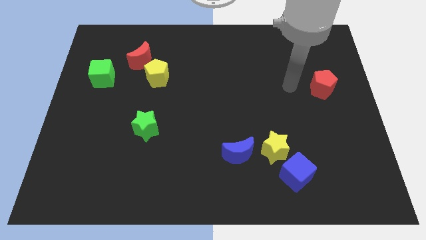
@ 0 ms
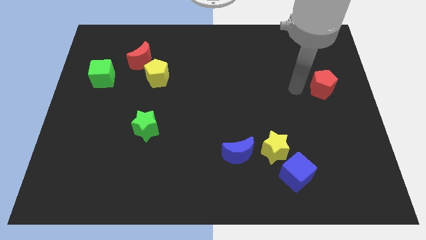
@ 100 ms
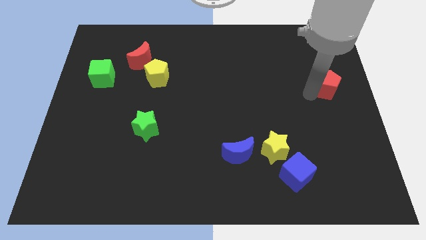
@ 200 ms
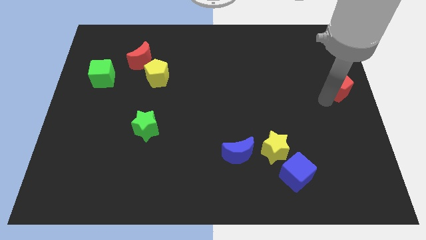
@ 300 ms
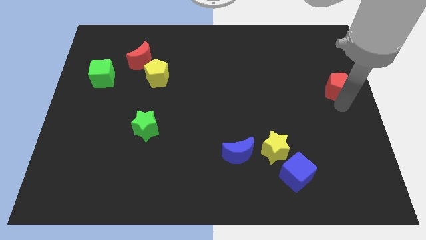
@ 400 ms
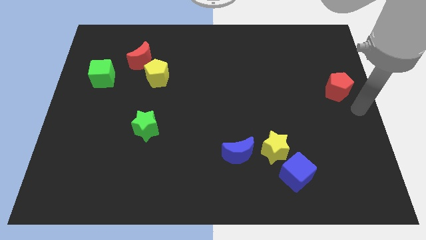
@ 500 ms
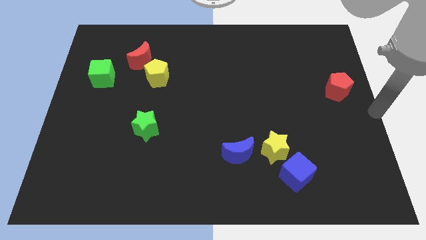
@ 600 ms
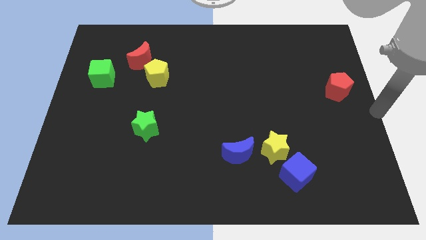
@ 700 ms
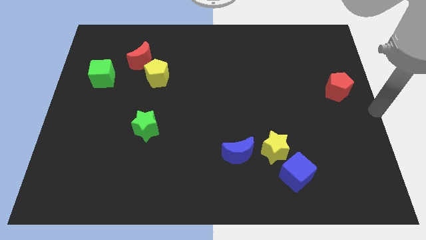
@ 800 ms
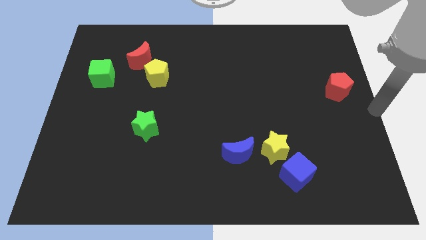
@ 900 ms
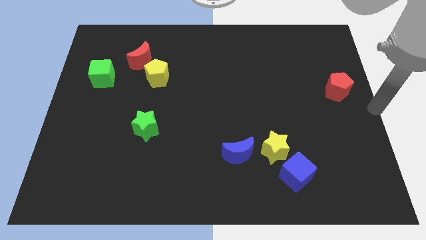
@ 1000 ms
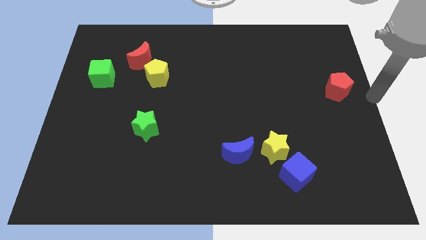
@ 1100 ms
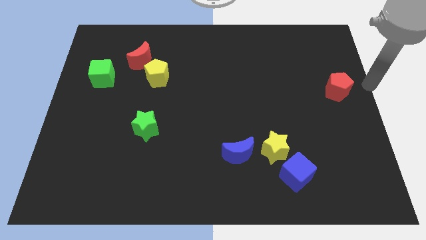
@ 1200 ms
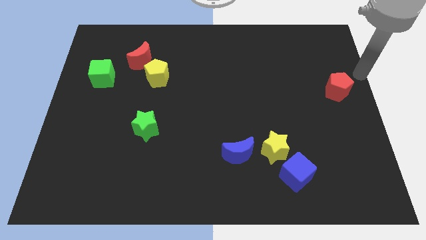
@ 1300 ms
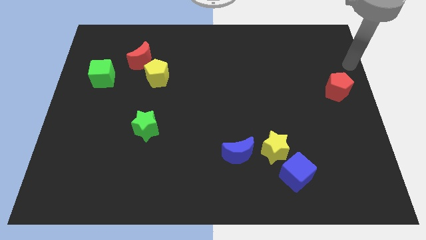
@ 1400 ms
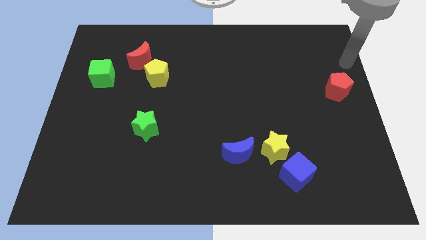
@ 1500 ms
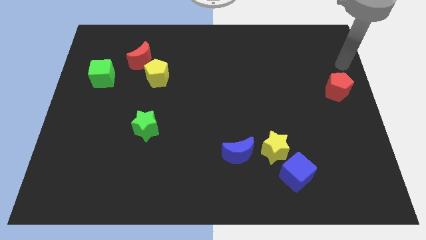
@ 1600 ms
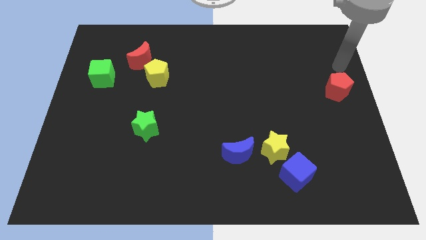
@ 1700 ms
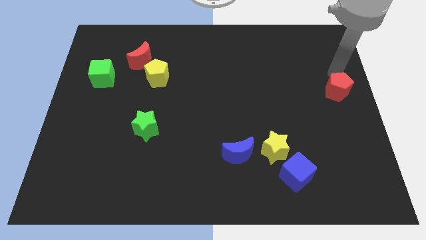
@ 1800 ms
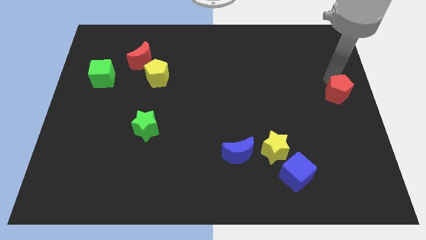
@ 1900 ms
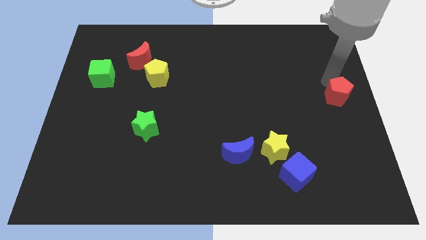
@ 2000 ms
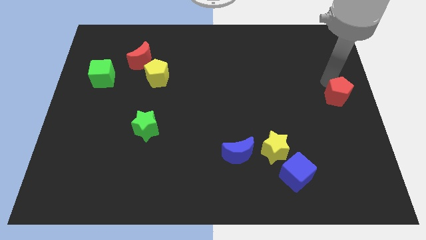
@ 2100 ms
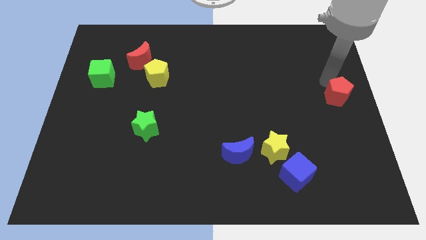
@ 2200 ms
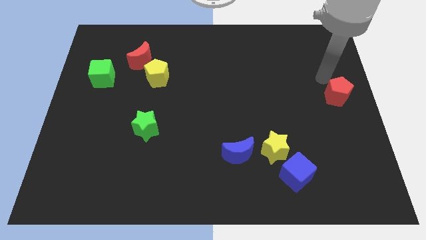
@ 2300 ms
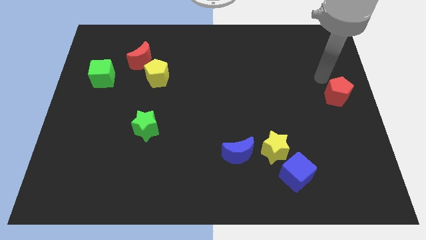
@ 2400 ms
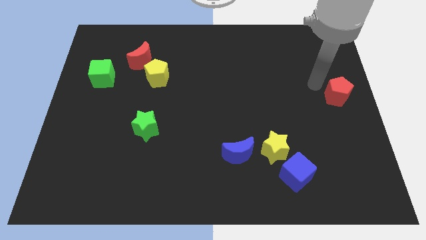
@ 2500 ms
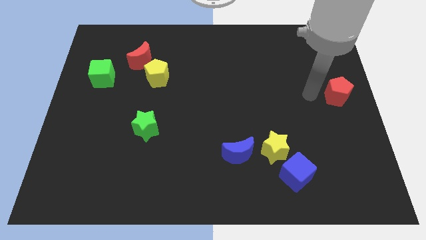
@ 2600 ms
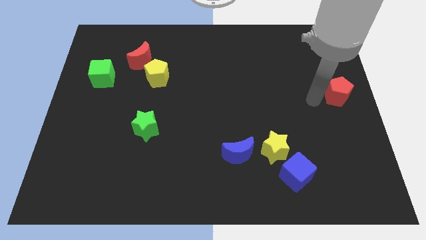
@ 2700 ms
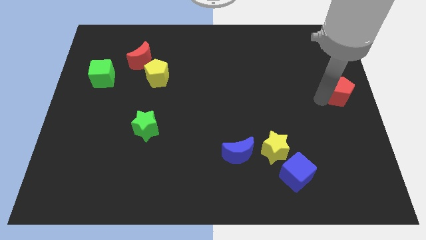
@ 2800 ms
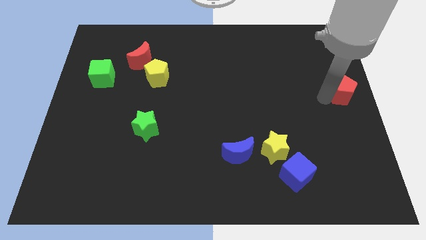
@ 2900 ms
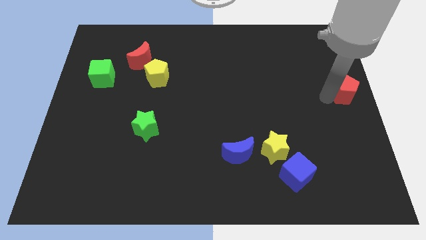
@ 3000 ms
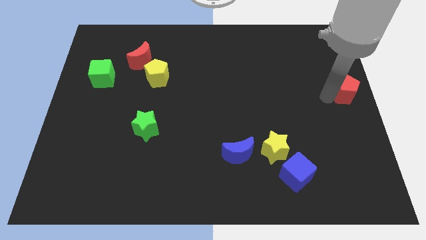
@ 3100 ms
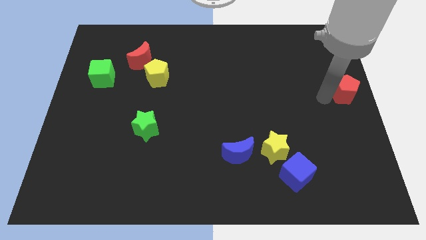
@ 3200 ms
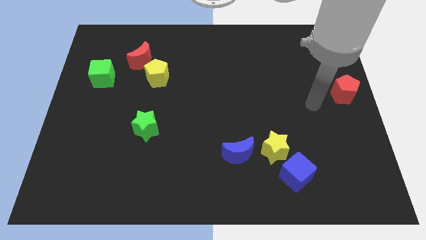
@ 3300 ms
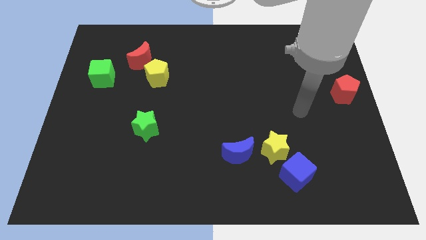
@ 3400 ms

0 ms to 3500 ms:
place the red pentagon at the center right side of the board

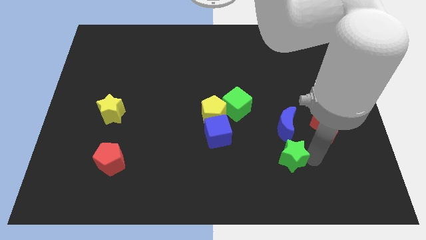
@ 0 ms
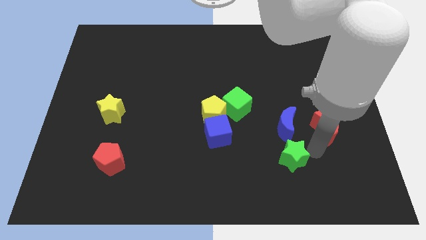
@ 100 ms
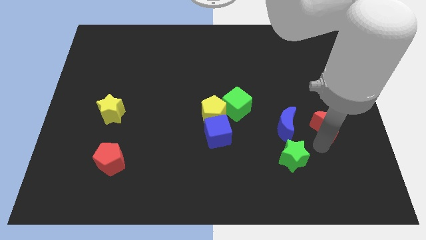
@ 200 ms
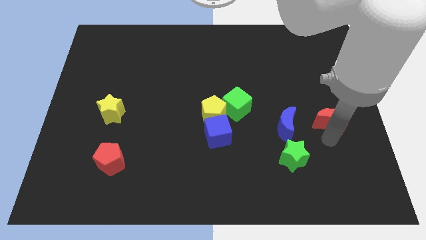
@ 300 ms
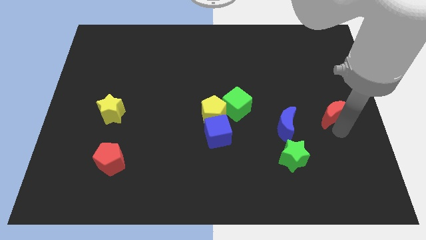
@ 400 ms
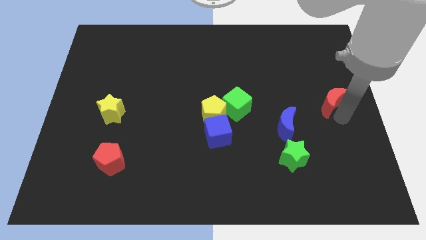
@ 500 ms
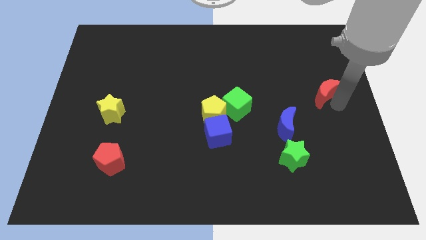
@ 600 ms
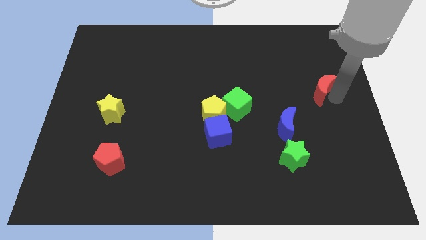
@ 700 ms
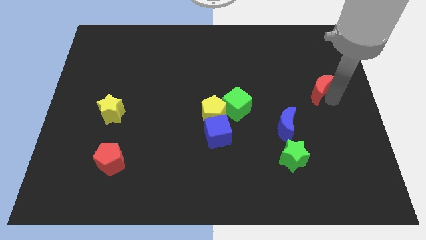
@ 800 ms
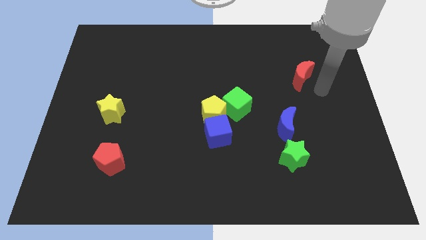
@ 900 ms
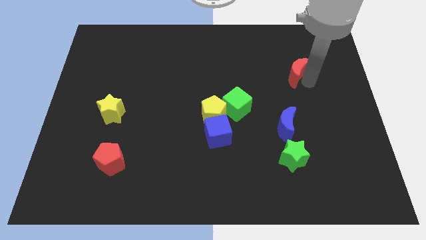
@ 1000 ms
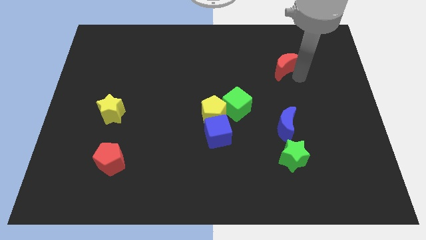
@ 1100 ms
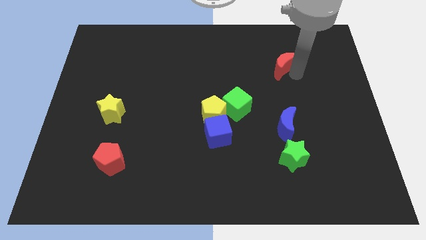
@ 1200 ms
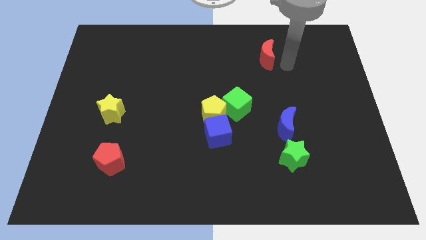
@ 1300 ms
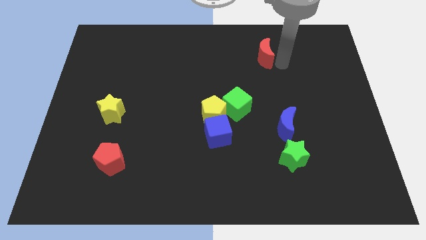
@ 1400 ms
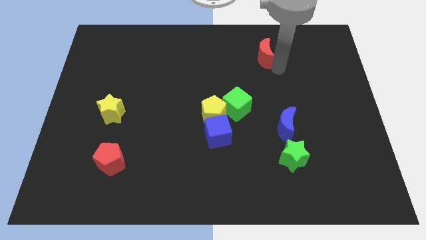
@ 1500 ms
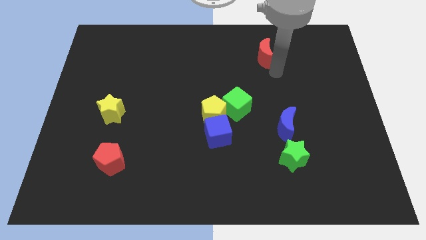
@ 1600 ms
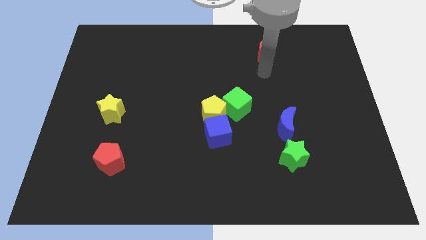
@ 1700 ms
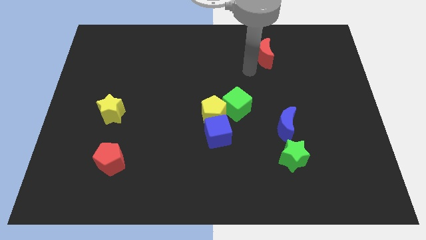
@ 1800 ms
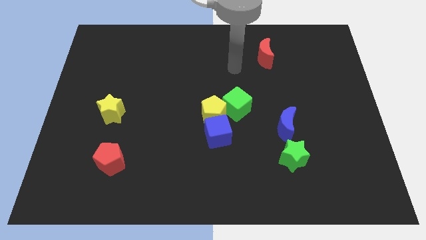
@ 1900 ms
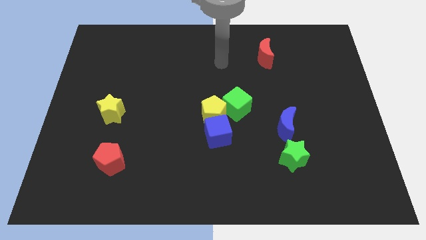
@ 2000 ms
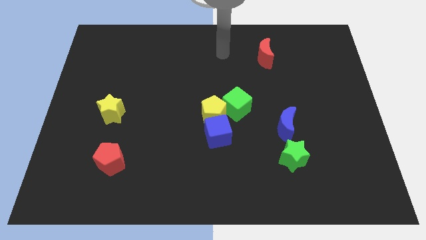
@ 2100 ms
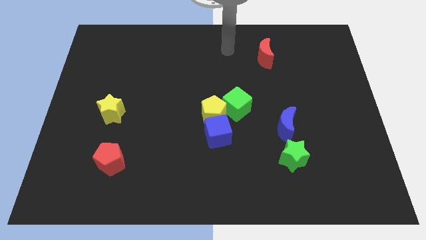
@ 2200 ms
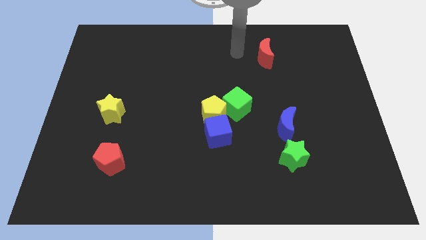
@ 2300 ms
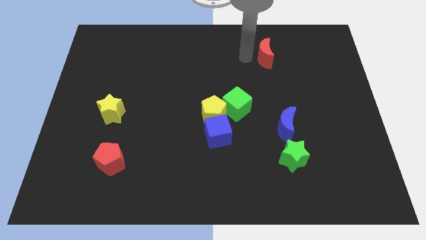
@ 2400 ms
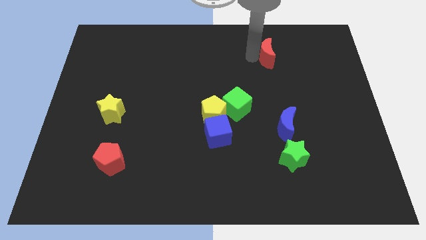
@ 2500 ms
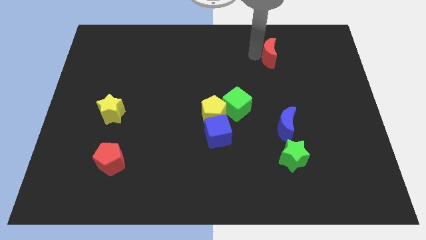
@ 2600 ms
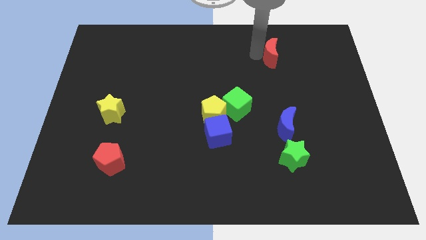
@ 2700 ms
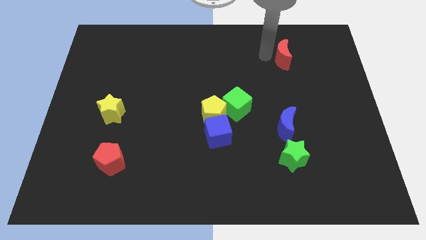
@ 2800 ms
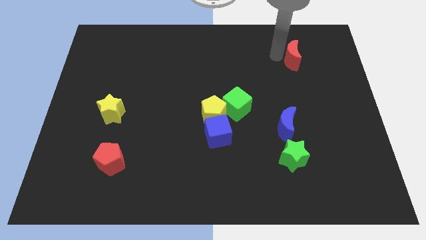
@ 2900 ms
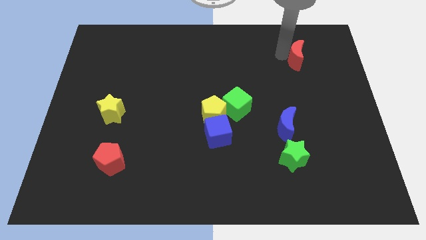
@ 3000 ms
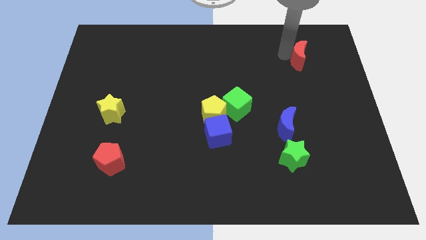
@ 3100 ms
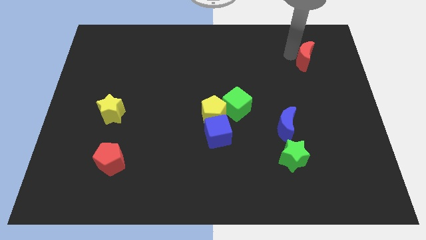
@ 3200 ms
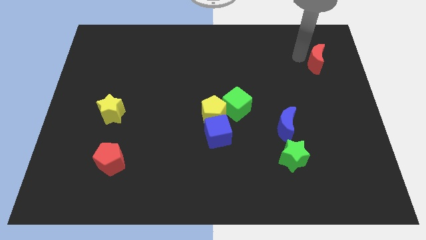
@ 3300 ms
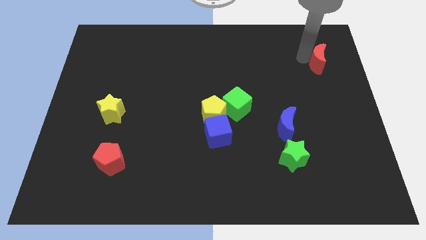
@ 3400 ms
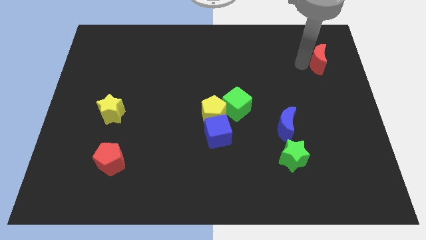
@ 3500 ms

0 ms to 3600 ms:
place red crescent on the right side of the board

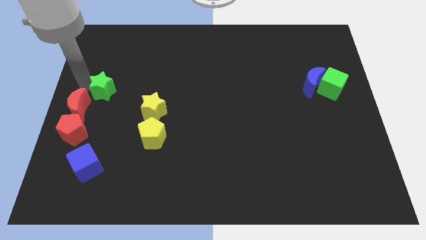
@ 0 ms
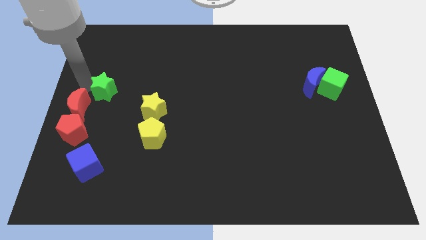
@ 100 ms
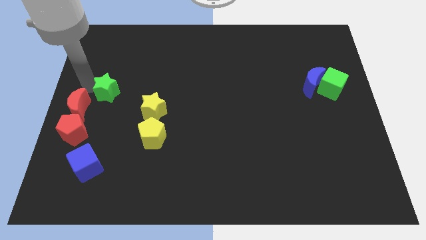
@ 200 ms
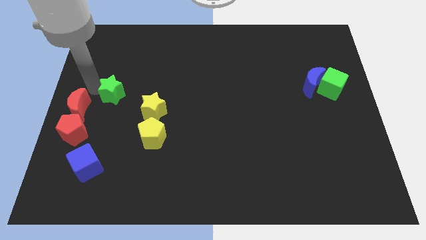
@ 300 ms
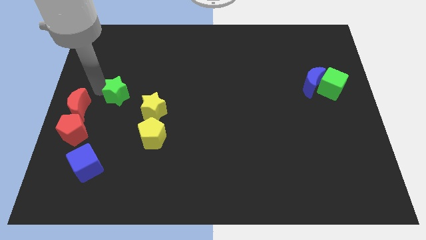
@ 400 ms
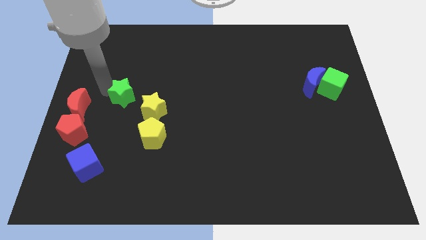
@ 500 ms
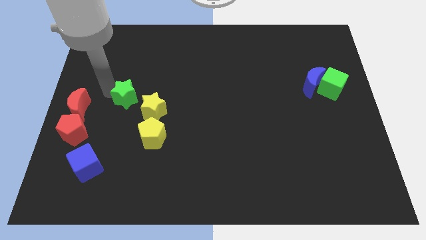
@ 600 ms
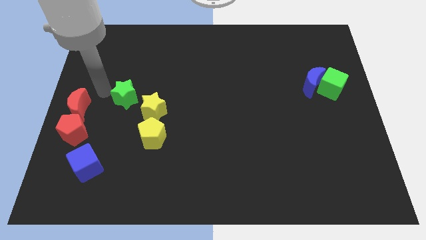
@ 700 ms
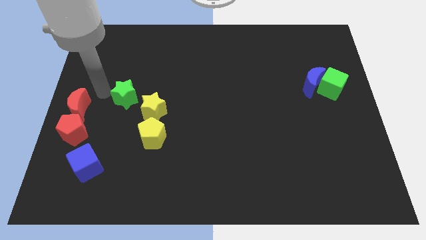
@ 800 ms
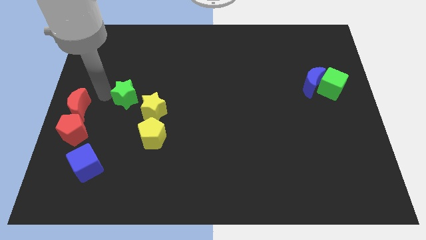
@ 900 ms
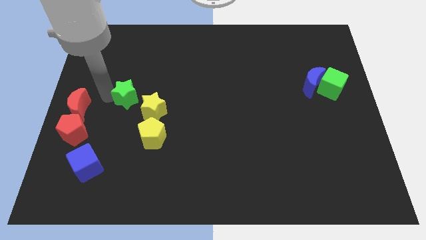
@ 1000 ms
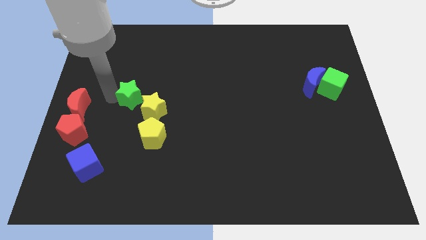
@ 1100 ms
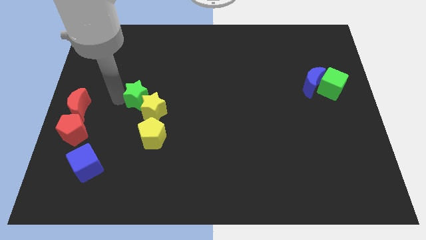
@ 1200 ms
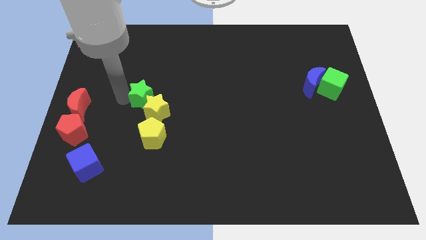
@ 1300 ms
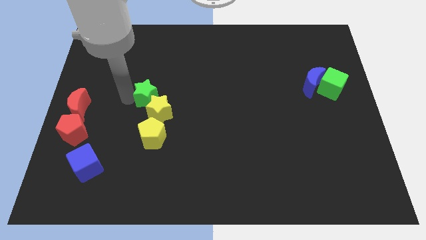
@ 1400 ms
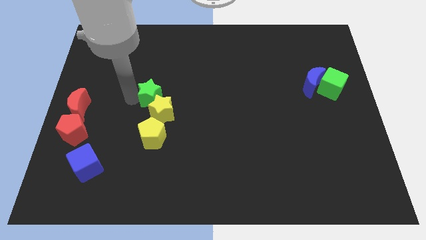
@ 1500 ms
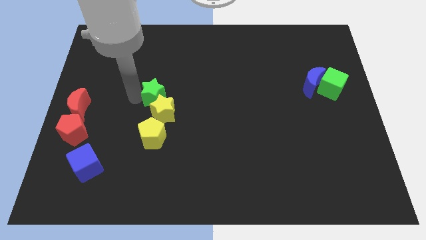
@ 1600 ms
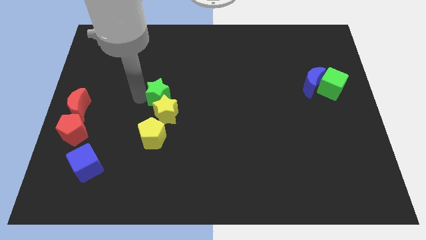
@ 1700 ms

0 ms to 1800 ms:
move the green star above the yellow star
